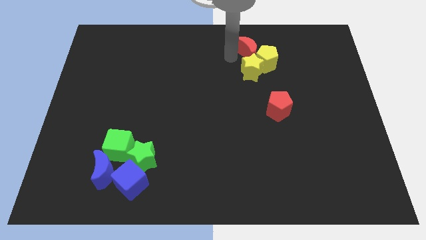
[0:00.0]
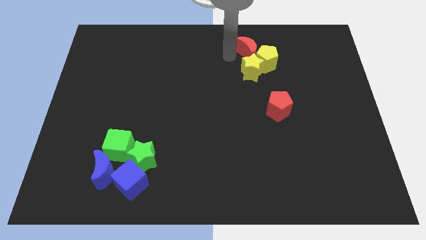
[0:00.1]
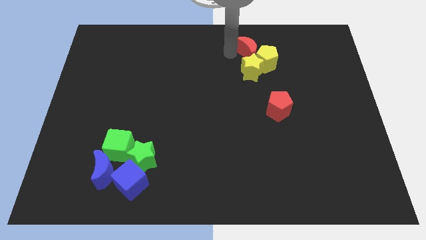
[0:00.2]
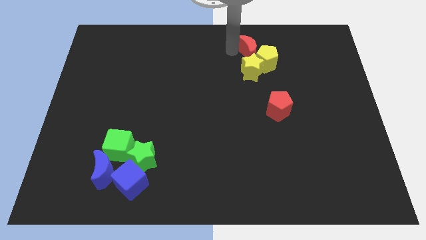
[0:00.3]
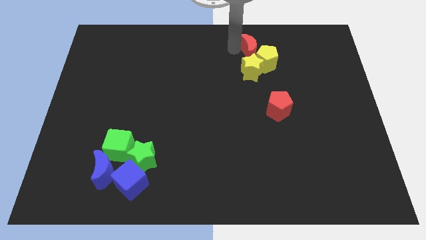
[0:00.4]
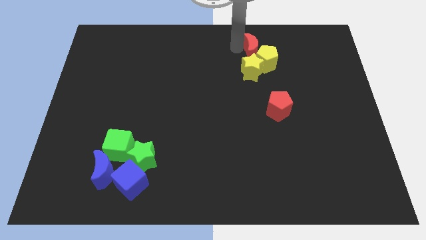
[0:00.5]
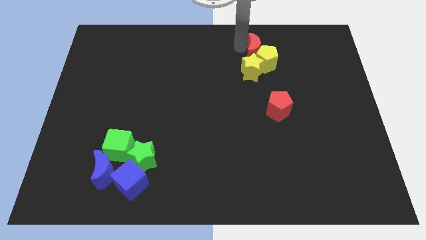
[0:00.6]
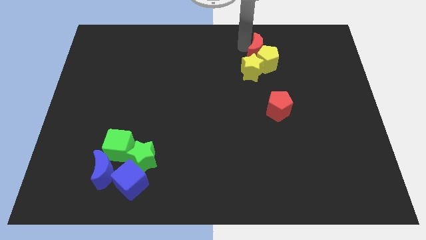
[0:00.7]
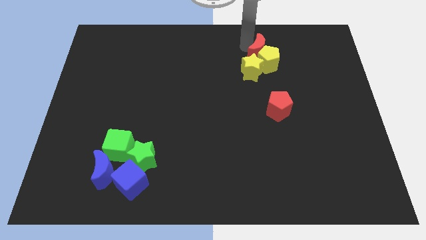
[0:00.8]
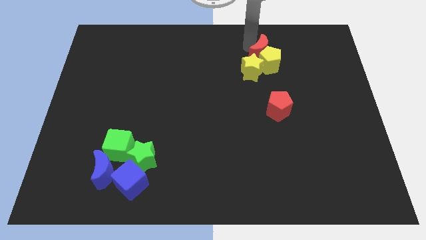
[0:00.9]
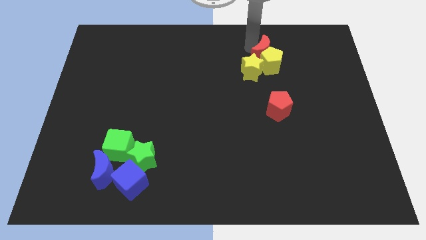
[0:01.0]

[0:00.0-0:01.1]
push the red moon into the yellow pentagon

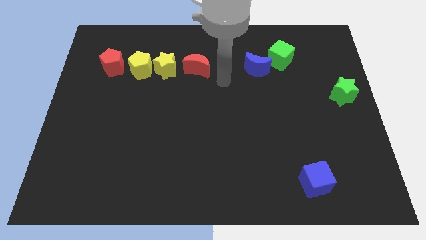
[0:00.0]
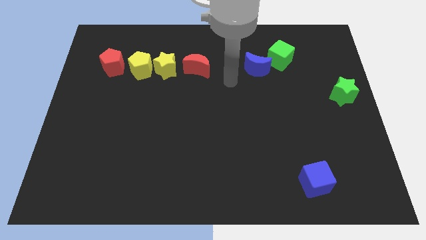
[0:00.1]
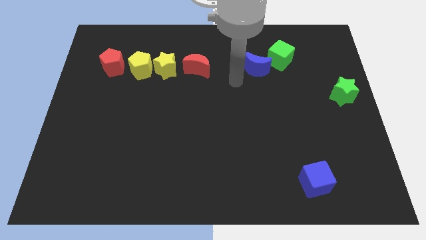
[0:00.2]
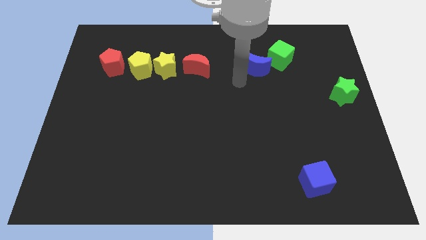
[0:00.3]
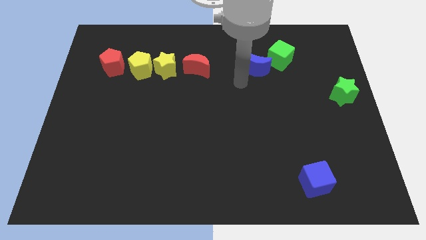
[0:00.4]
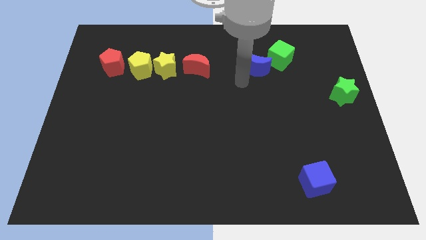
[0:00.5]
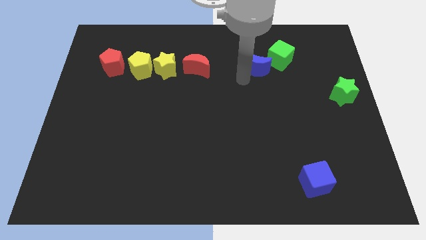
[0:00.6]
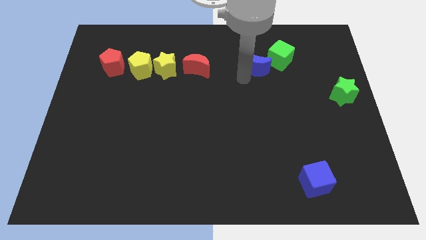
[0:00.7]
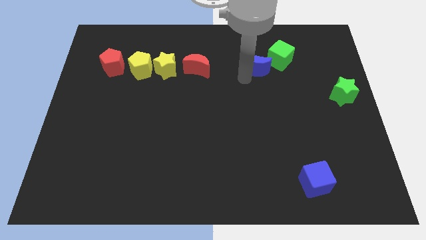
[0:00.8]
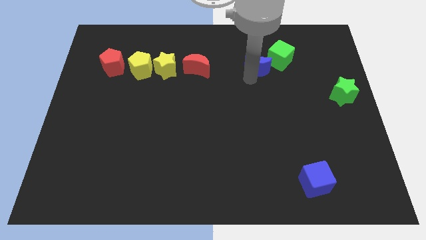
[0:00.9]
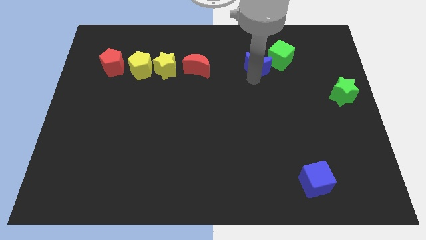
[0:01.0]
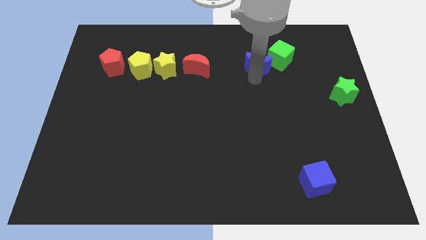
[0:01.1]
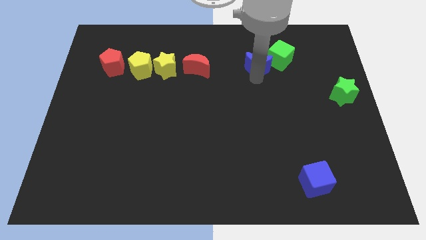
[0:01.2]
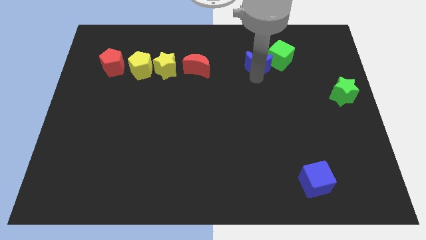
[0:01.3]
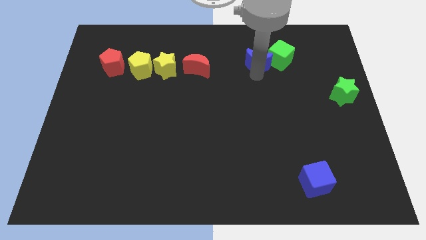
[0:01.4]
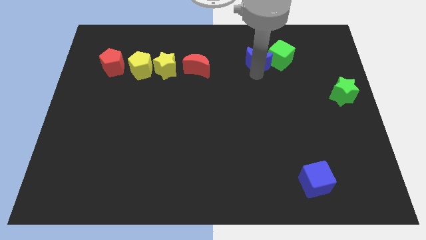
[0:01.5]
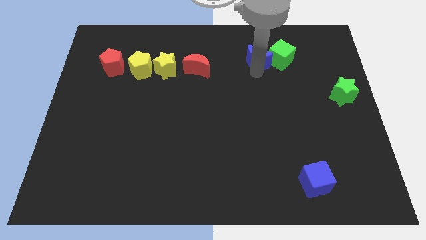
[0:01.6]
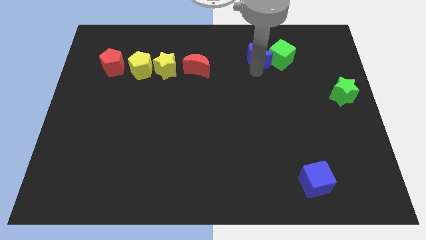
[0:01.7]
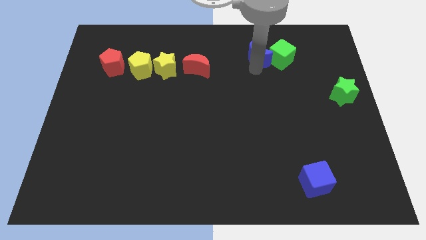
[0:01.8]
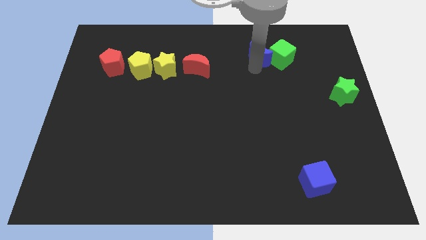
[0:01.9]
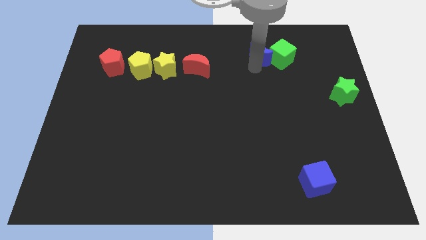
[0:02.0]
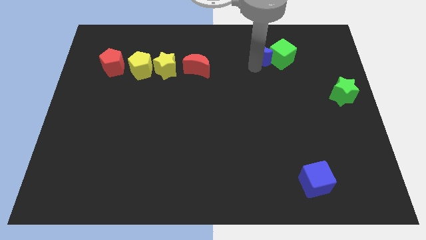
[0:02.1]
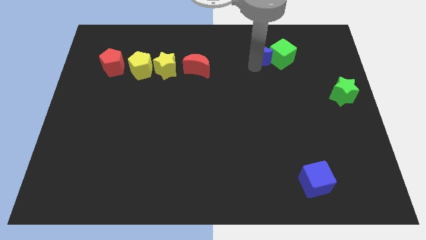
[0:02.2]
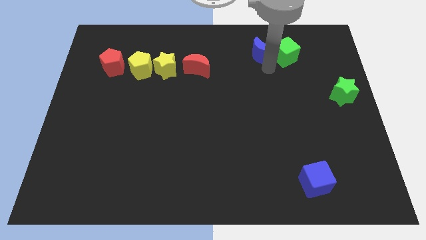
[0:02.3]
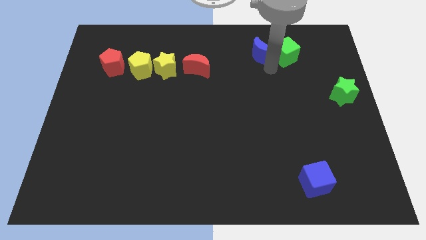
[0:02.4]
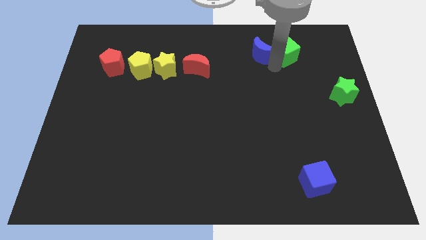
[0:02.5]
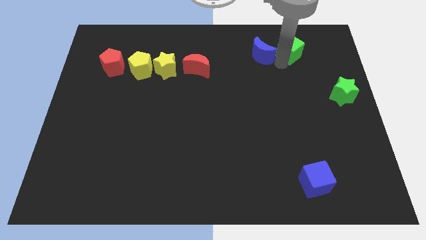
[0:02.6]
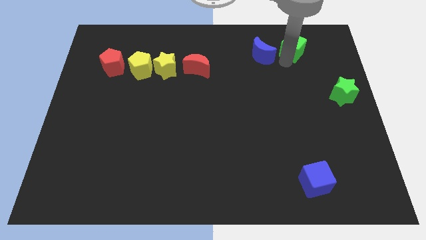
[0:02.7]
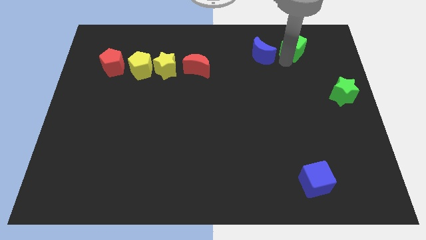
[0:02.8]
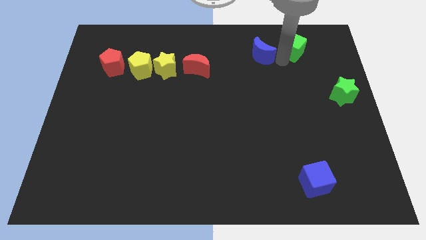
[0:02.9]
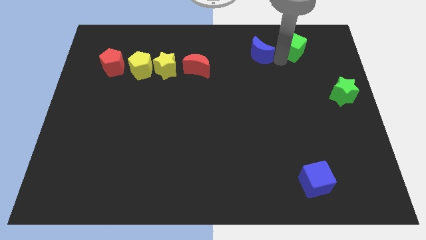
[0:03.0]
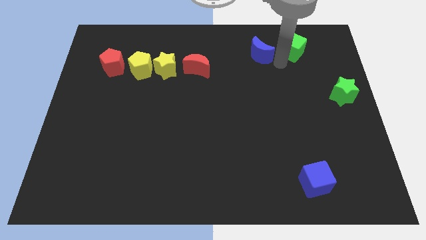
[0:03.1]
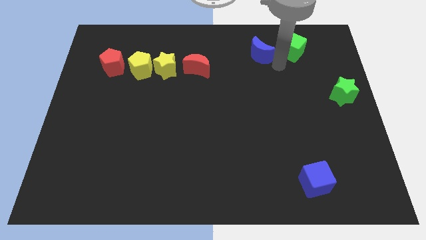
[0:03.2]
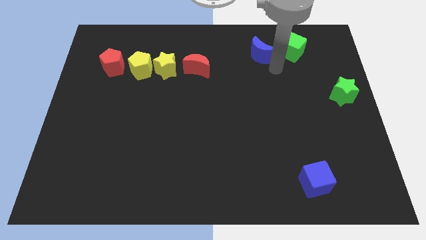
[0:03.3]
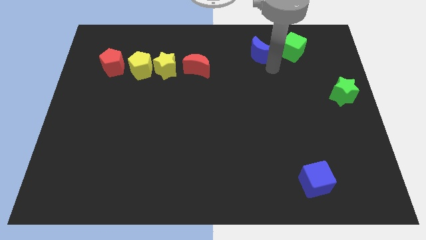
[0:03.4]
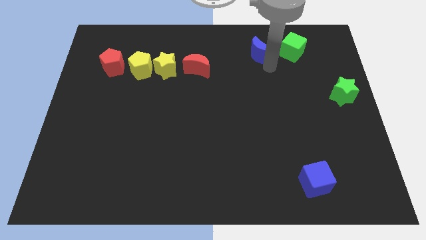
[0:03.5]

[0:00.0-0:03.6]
separate the green cube and the blue moon

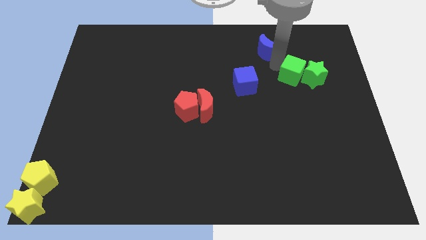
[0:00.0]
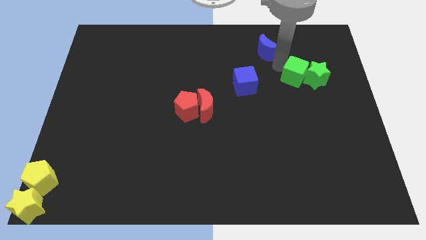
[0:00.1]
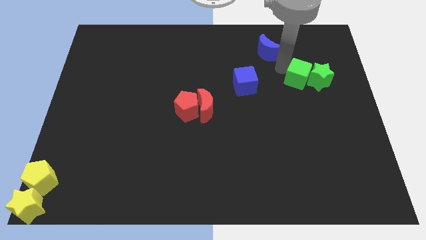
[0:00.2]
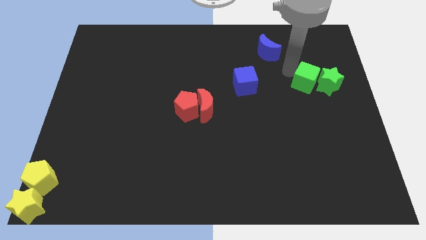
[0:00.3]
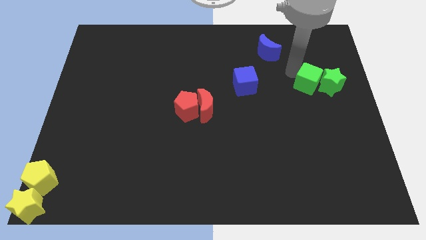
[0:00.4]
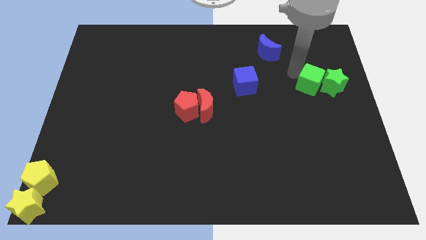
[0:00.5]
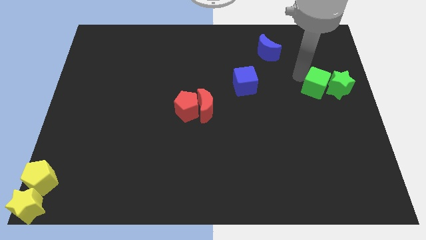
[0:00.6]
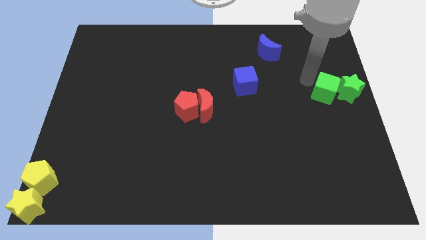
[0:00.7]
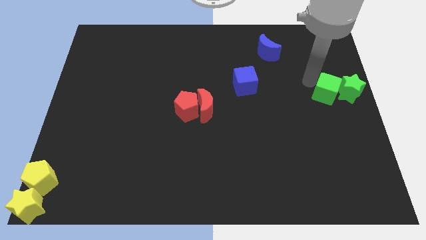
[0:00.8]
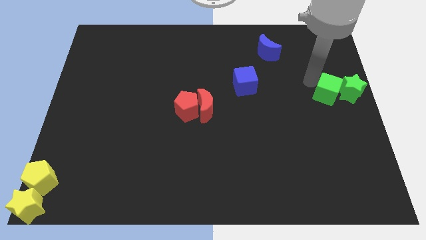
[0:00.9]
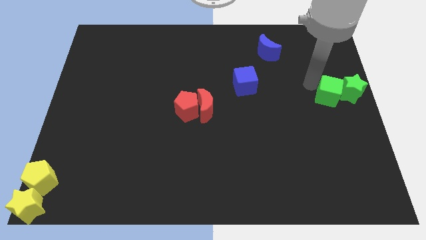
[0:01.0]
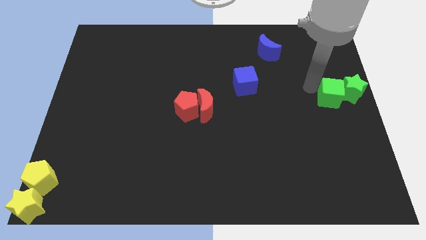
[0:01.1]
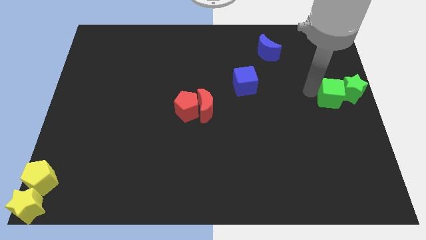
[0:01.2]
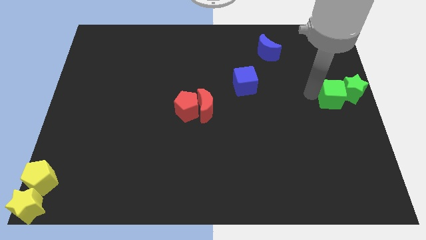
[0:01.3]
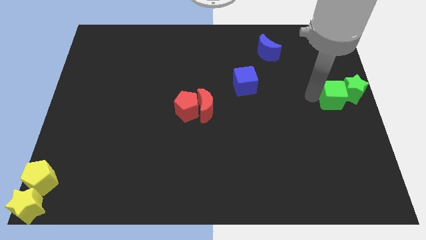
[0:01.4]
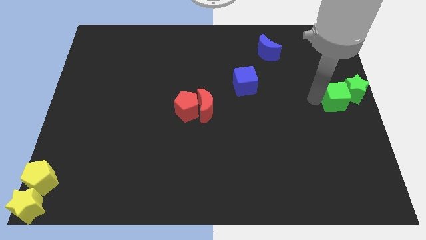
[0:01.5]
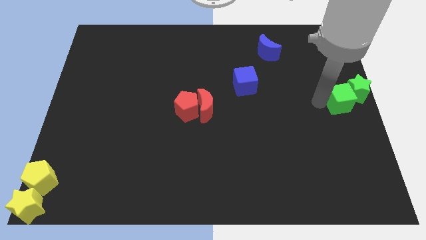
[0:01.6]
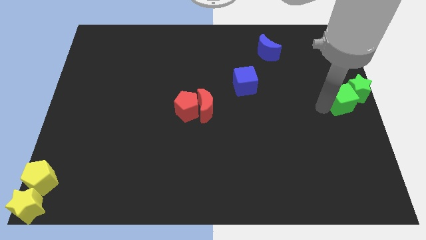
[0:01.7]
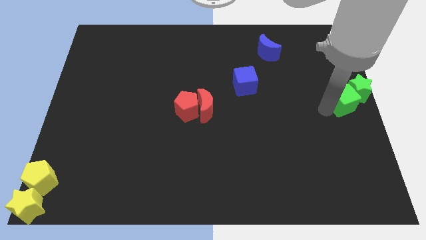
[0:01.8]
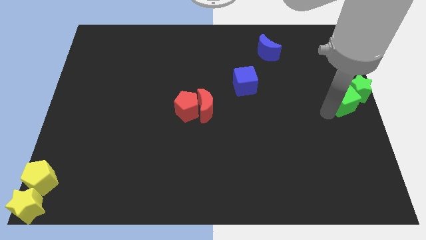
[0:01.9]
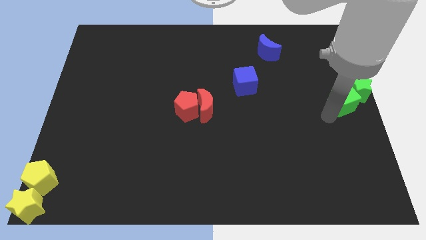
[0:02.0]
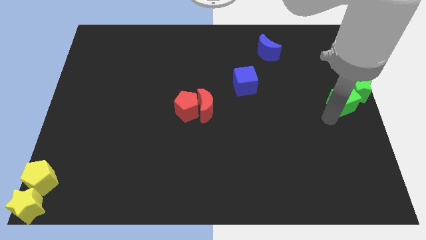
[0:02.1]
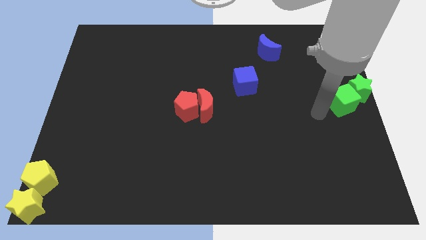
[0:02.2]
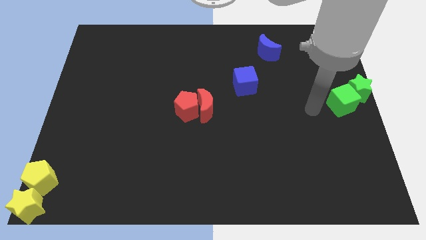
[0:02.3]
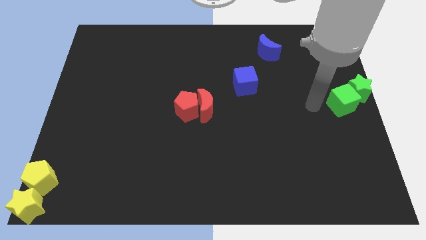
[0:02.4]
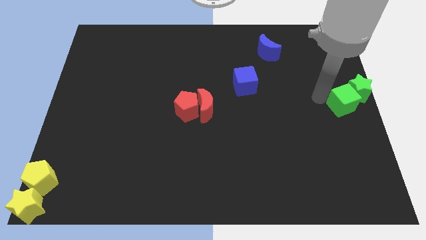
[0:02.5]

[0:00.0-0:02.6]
place the green star at the center right

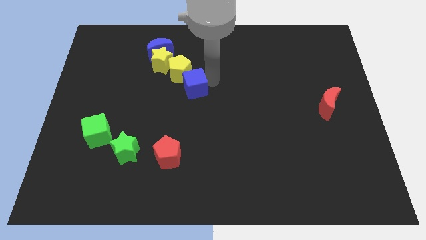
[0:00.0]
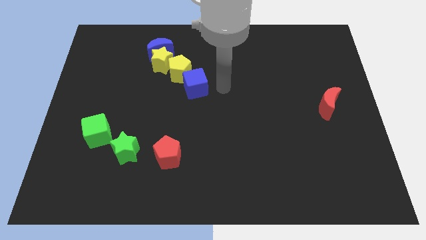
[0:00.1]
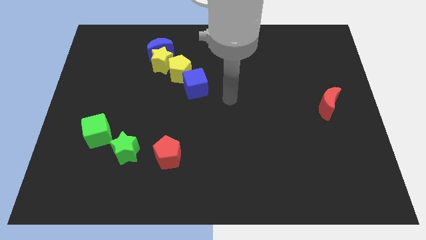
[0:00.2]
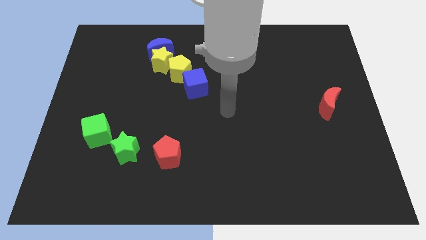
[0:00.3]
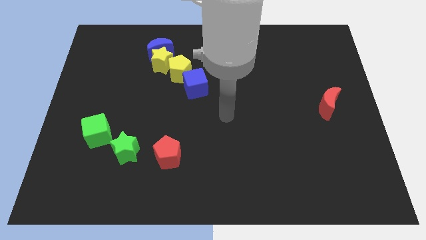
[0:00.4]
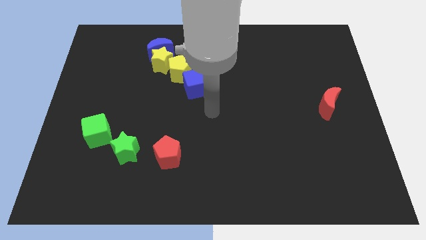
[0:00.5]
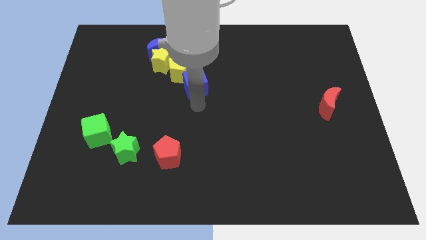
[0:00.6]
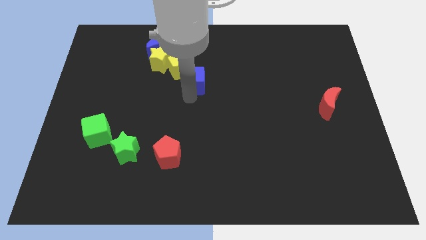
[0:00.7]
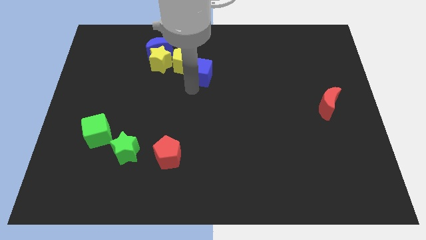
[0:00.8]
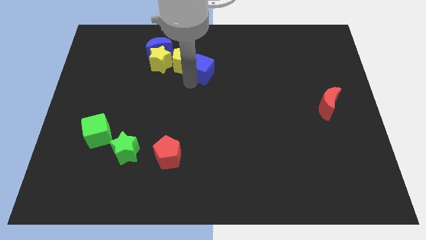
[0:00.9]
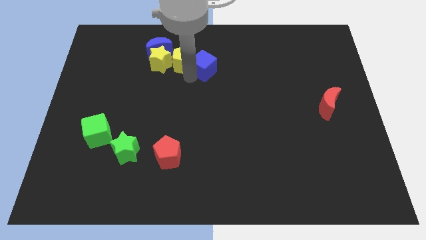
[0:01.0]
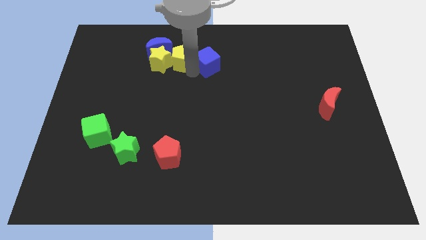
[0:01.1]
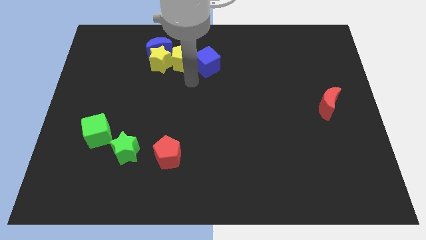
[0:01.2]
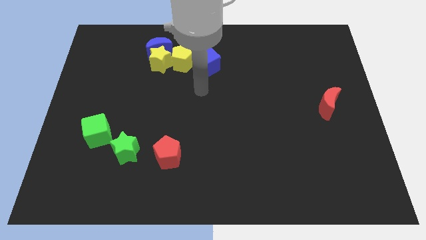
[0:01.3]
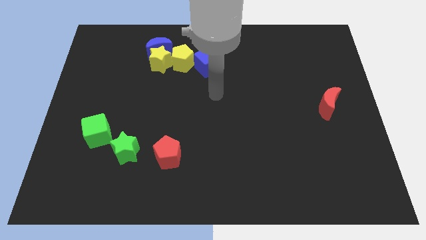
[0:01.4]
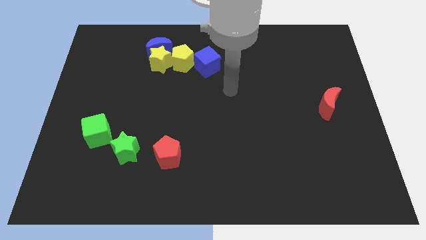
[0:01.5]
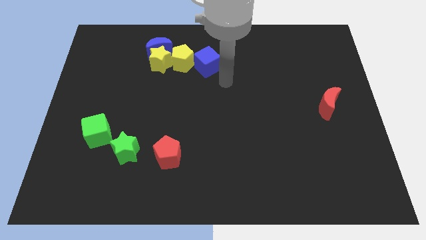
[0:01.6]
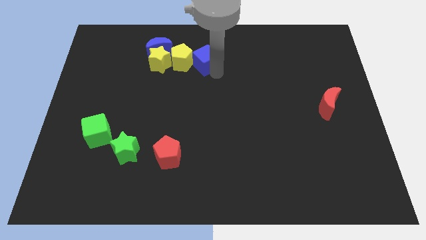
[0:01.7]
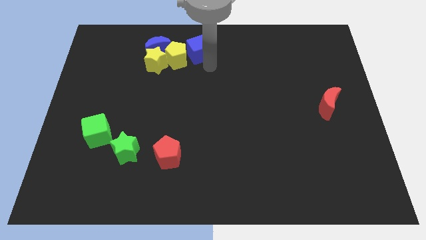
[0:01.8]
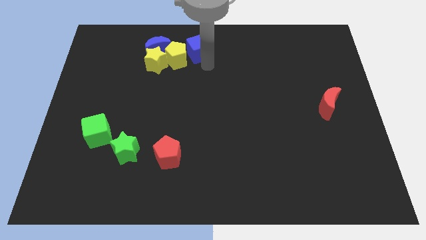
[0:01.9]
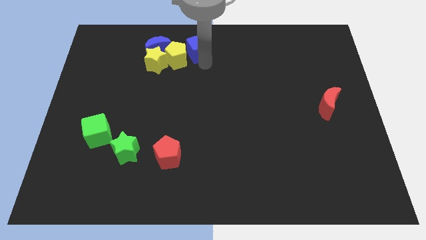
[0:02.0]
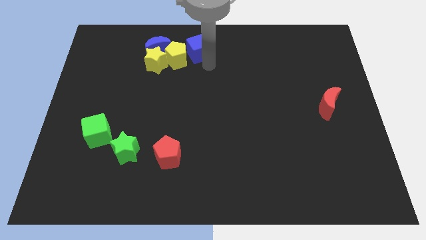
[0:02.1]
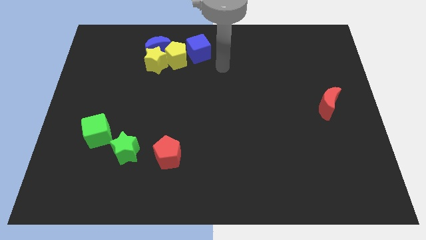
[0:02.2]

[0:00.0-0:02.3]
move the blue cube at the top right side of the yellow pentagon
